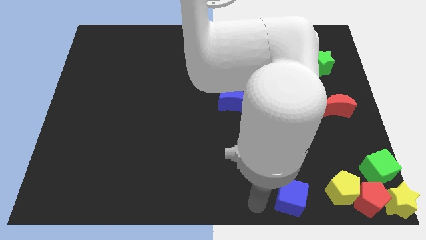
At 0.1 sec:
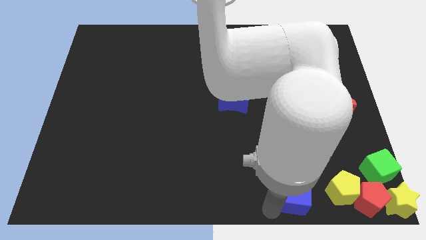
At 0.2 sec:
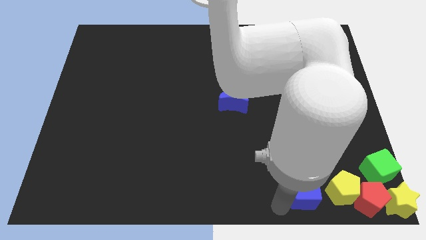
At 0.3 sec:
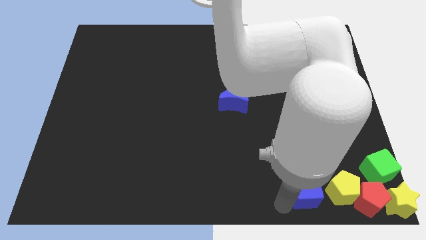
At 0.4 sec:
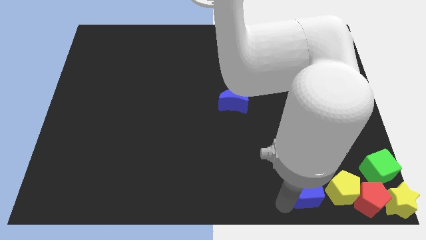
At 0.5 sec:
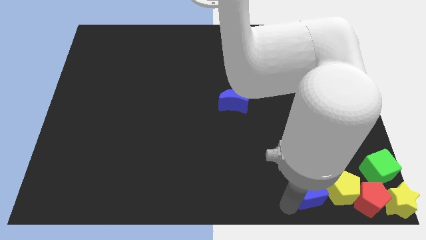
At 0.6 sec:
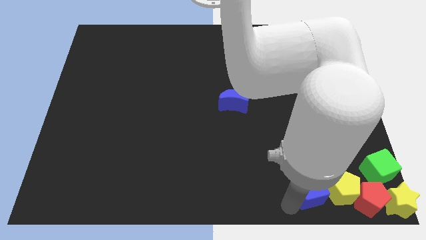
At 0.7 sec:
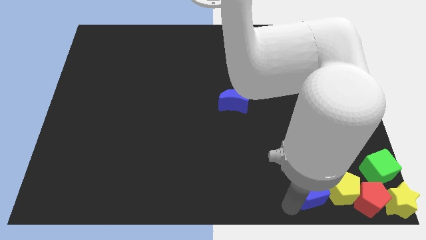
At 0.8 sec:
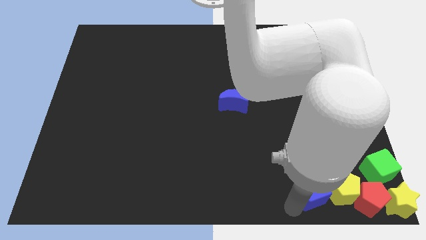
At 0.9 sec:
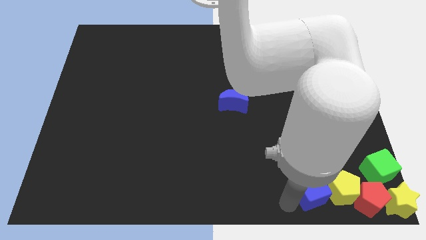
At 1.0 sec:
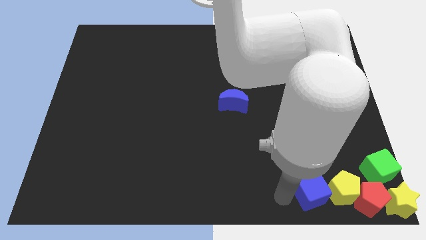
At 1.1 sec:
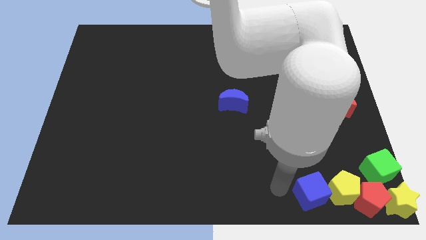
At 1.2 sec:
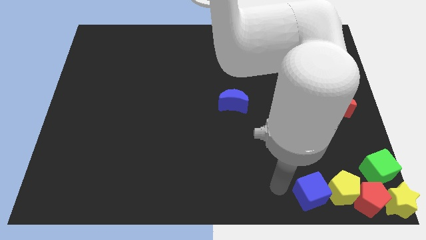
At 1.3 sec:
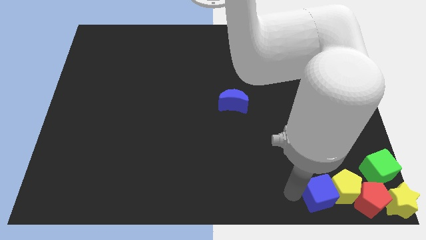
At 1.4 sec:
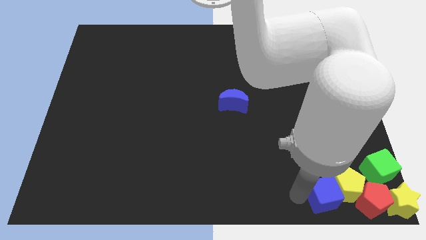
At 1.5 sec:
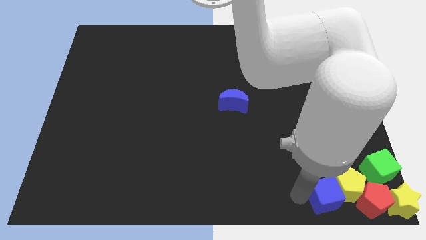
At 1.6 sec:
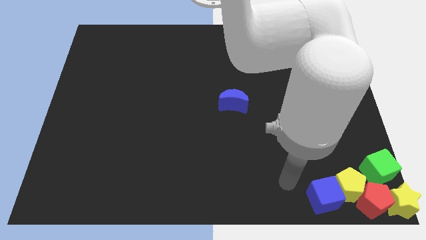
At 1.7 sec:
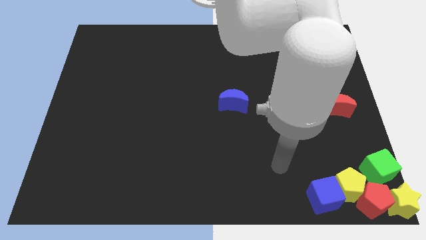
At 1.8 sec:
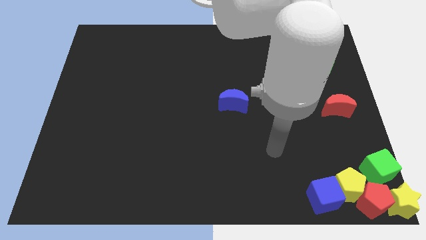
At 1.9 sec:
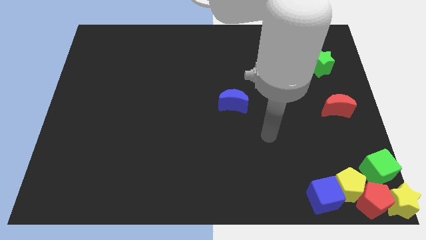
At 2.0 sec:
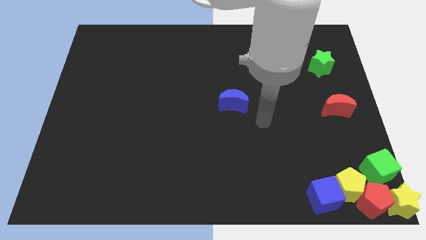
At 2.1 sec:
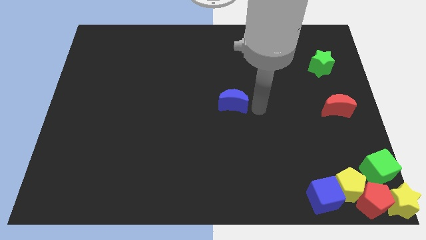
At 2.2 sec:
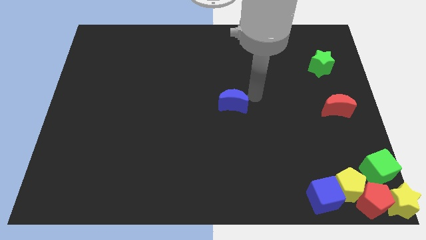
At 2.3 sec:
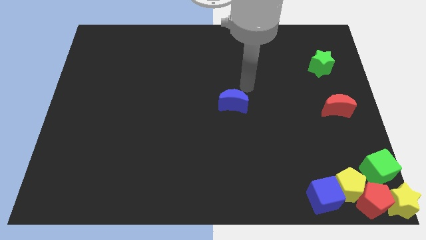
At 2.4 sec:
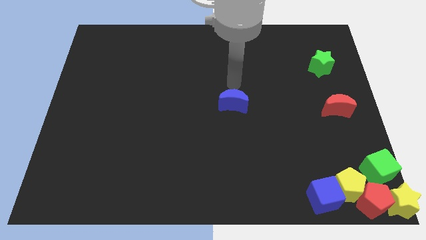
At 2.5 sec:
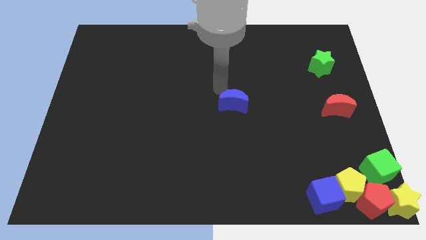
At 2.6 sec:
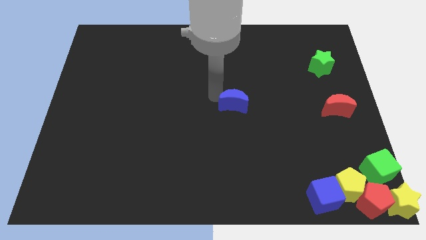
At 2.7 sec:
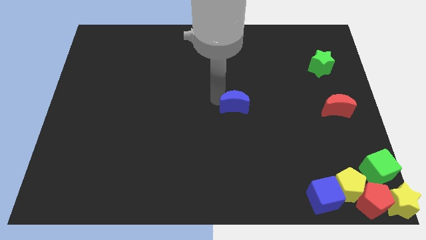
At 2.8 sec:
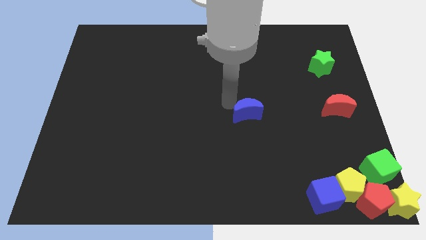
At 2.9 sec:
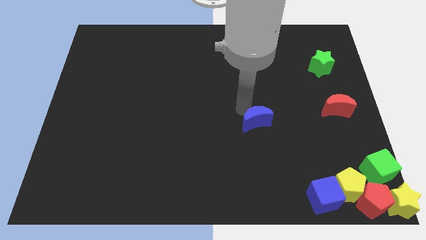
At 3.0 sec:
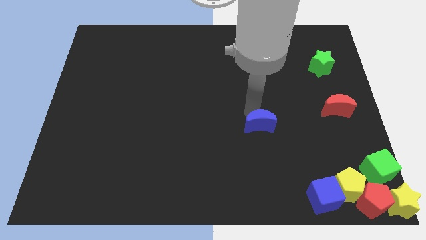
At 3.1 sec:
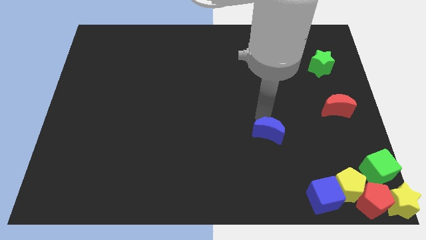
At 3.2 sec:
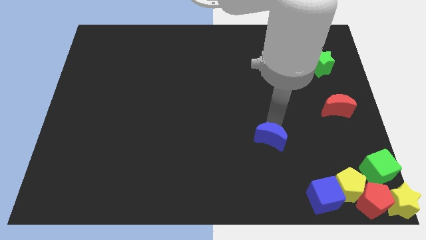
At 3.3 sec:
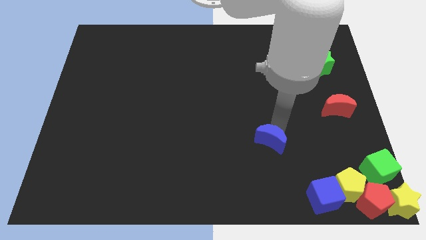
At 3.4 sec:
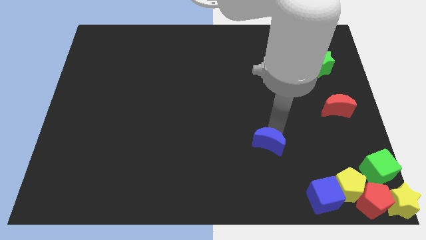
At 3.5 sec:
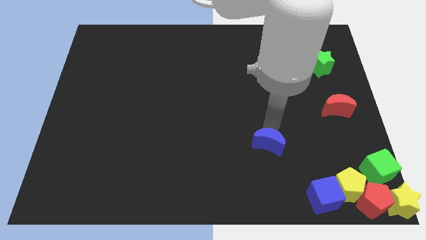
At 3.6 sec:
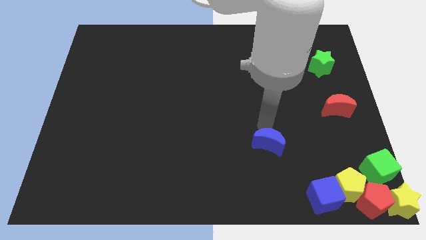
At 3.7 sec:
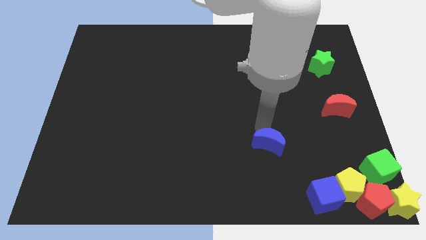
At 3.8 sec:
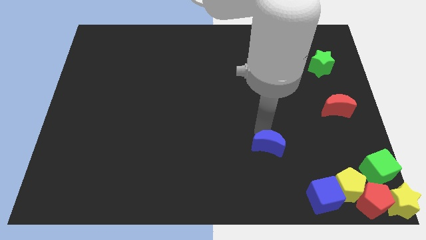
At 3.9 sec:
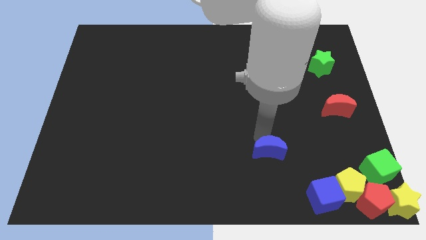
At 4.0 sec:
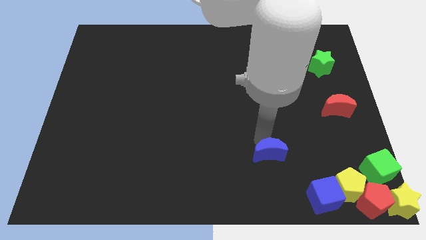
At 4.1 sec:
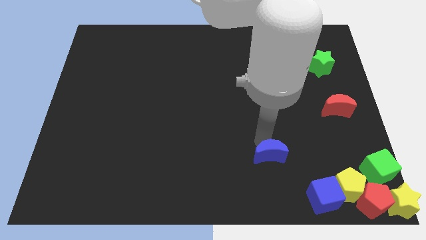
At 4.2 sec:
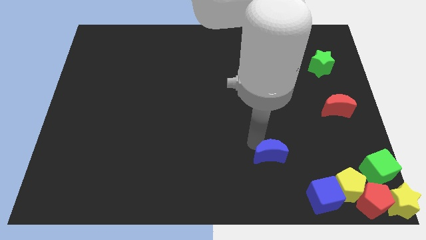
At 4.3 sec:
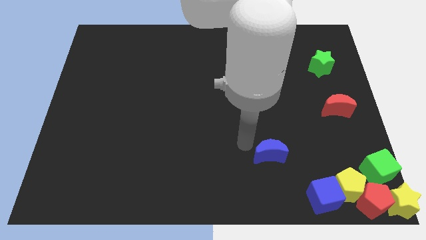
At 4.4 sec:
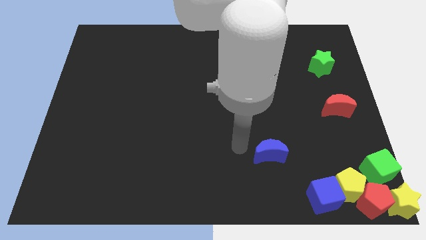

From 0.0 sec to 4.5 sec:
drag the blue crescent diagonal to the blue cube

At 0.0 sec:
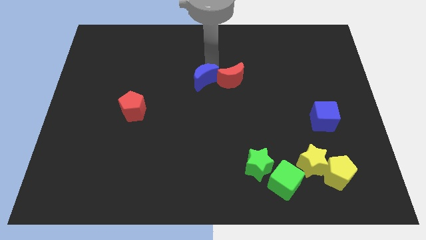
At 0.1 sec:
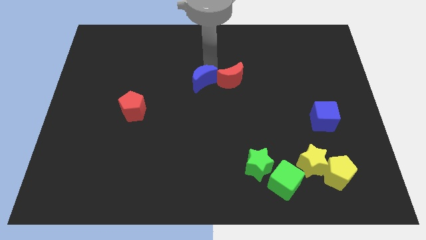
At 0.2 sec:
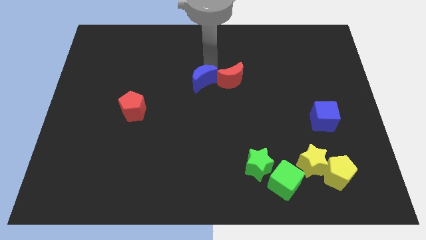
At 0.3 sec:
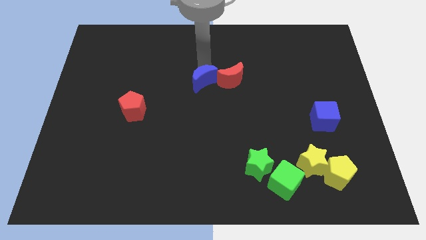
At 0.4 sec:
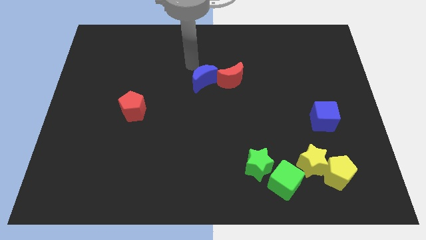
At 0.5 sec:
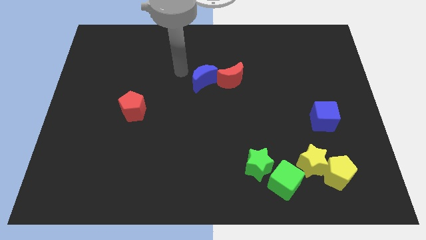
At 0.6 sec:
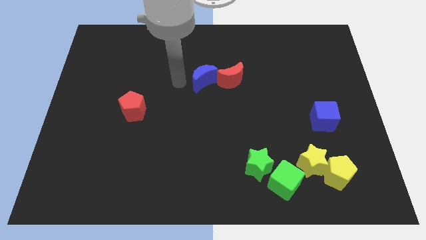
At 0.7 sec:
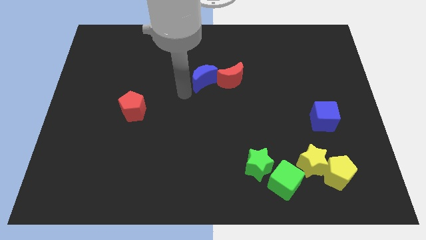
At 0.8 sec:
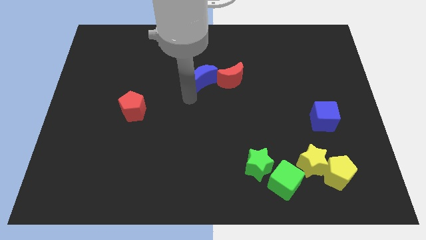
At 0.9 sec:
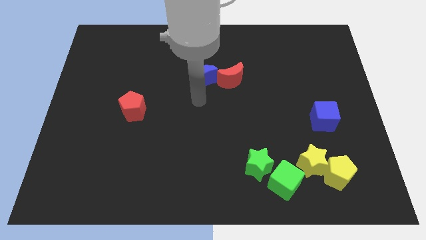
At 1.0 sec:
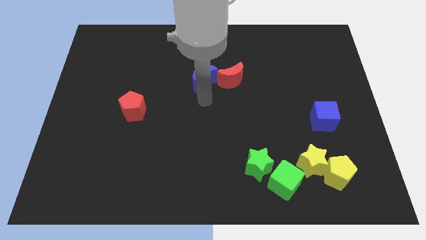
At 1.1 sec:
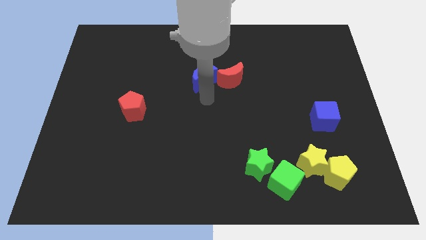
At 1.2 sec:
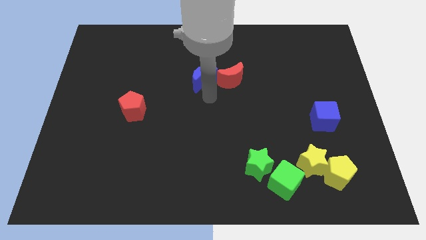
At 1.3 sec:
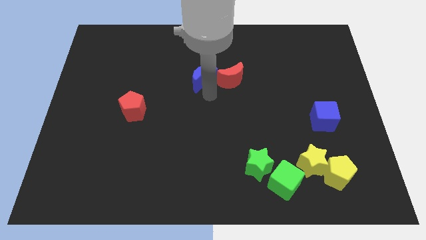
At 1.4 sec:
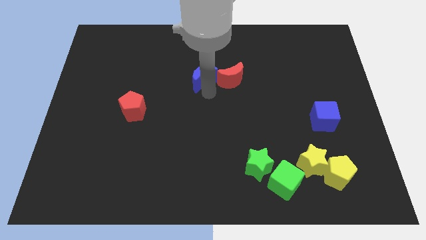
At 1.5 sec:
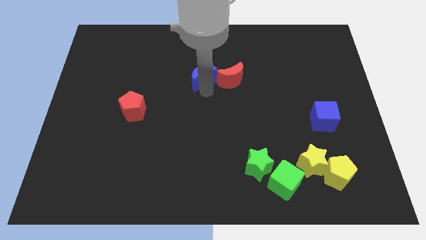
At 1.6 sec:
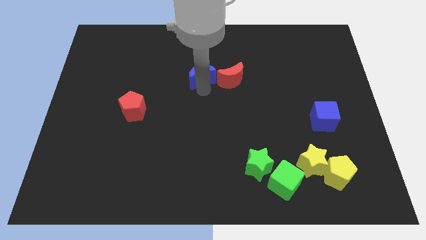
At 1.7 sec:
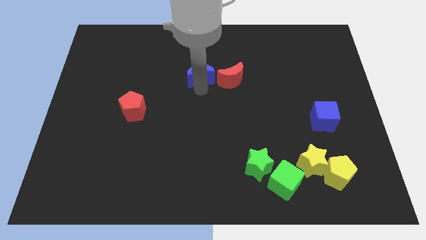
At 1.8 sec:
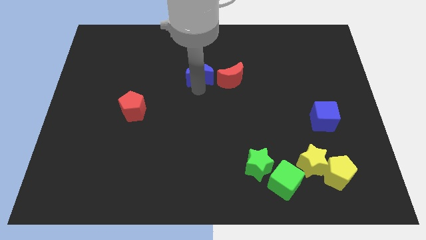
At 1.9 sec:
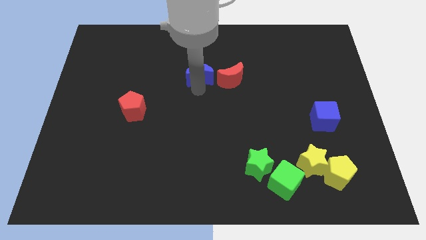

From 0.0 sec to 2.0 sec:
place the blue crescent left to the red crescent

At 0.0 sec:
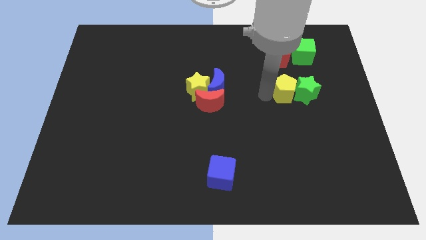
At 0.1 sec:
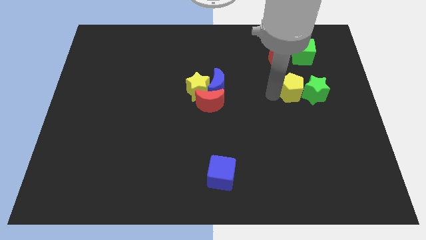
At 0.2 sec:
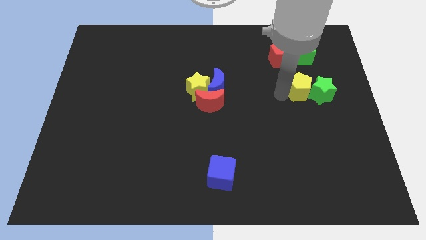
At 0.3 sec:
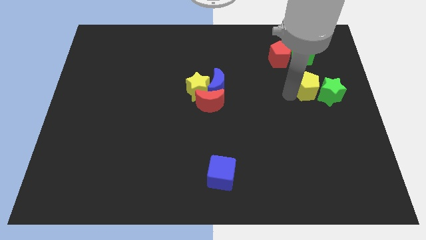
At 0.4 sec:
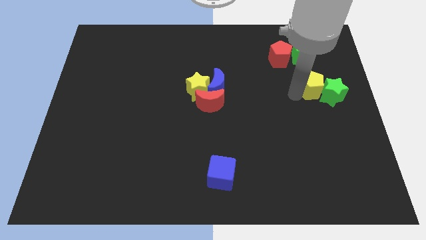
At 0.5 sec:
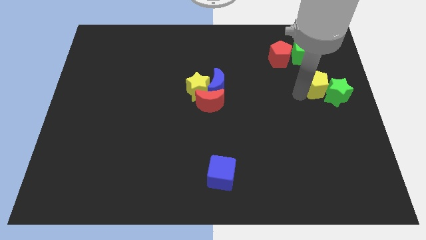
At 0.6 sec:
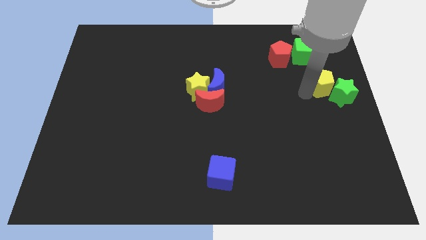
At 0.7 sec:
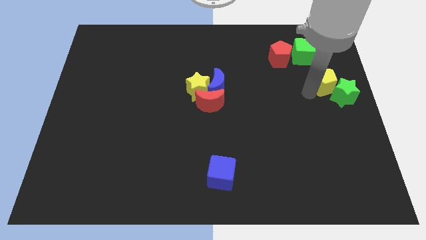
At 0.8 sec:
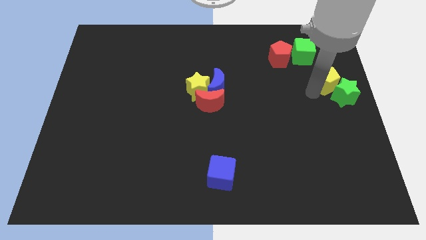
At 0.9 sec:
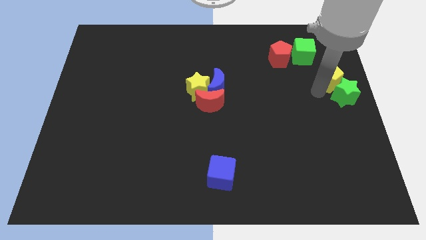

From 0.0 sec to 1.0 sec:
push the yellow pentagon to the right

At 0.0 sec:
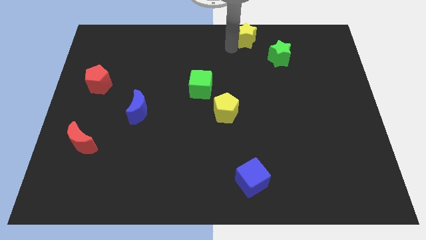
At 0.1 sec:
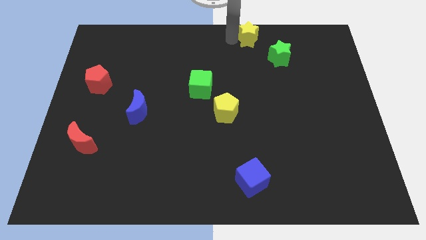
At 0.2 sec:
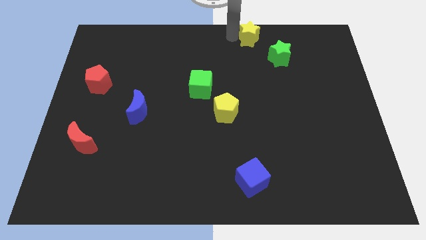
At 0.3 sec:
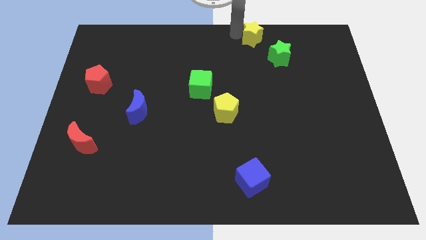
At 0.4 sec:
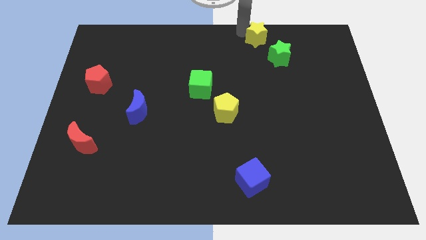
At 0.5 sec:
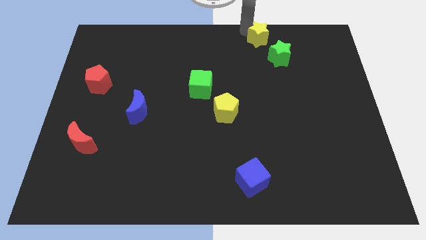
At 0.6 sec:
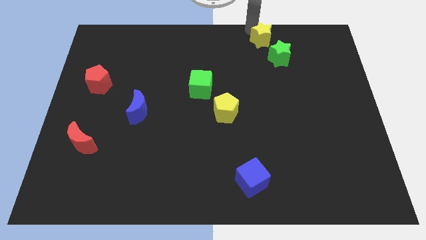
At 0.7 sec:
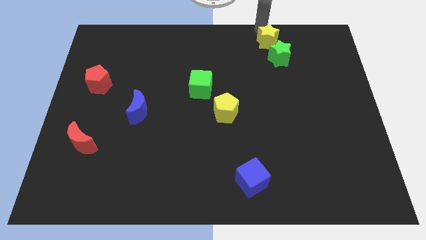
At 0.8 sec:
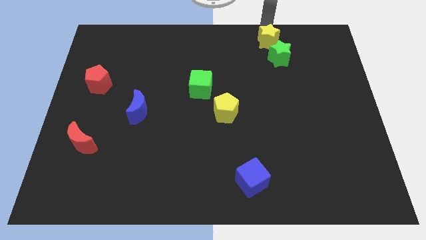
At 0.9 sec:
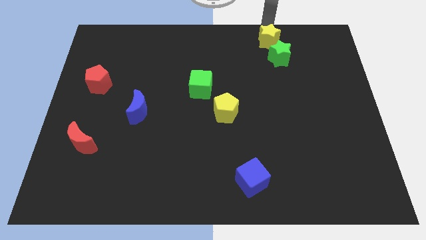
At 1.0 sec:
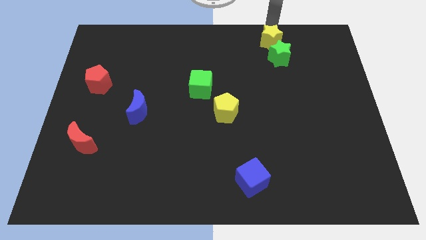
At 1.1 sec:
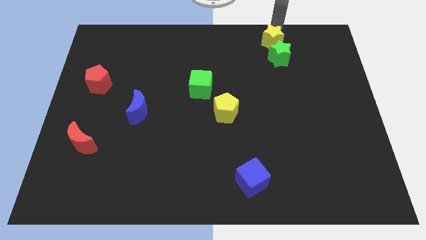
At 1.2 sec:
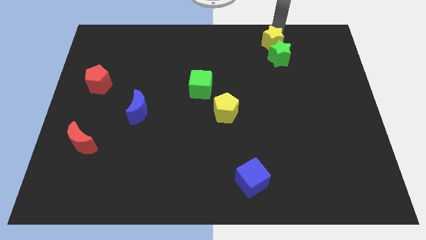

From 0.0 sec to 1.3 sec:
place yellow star above green star
